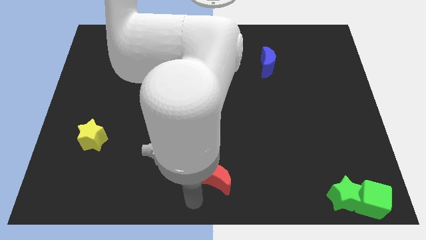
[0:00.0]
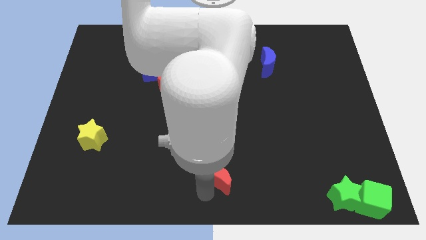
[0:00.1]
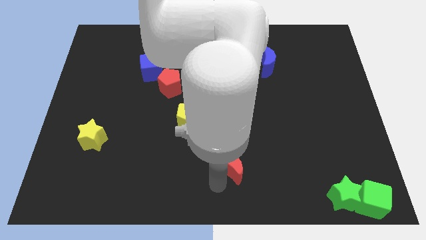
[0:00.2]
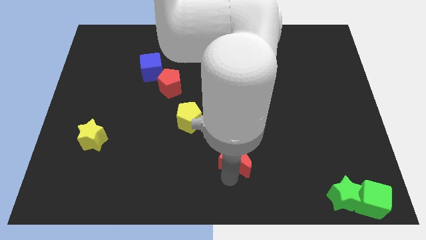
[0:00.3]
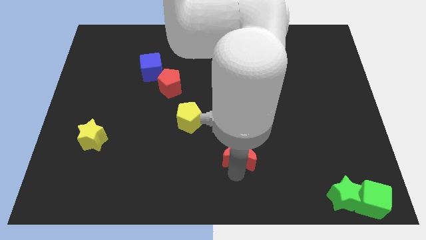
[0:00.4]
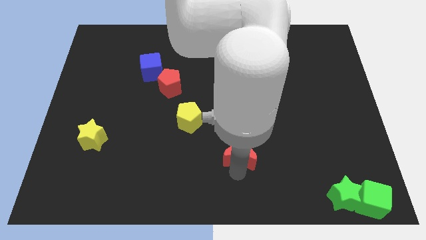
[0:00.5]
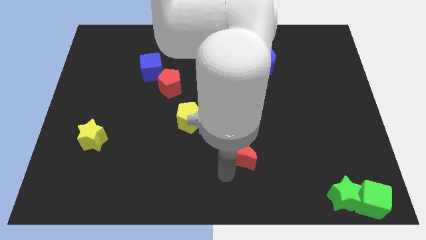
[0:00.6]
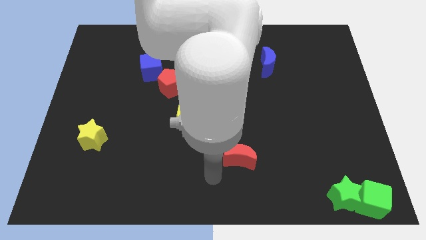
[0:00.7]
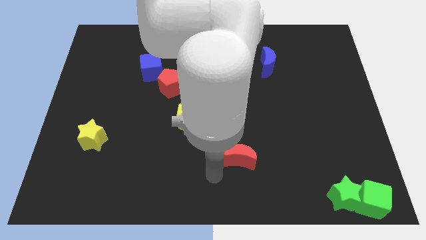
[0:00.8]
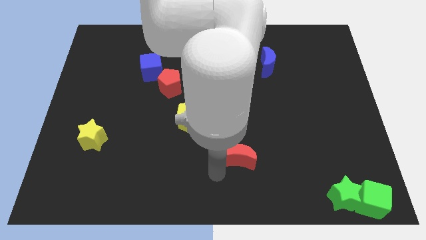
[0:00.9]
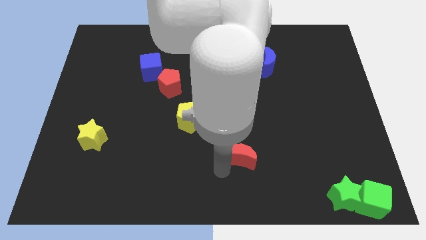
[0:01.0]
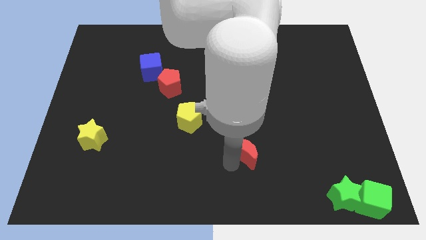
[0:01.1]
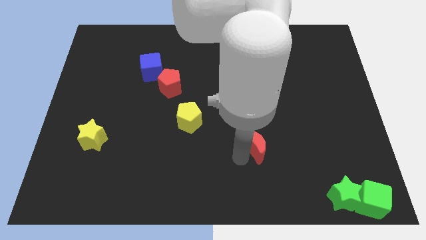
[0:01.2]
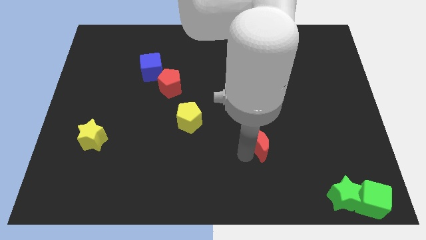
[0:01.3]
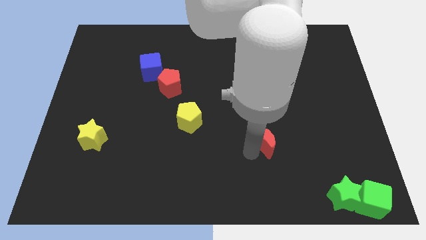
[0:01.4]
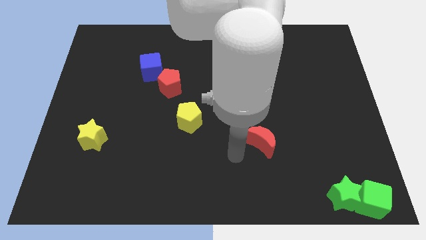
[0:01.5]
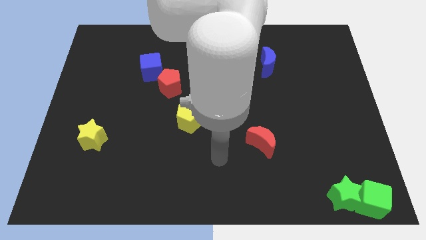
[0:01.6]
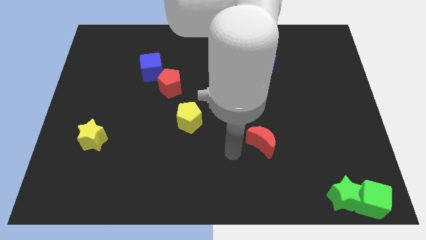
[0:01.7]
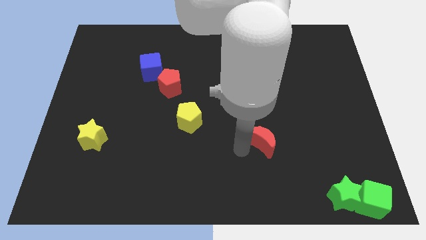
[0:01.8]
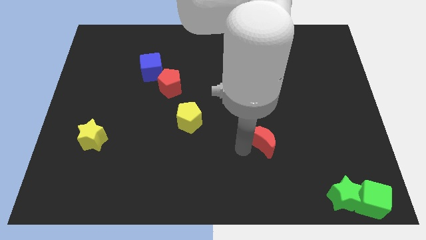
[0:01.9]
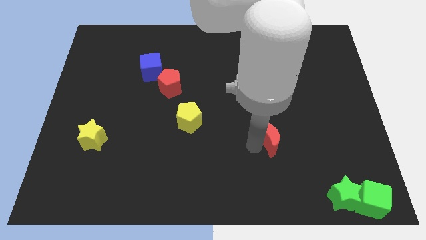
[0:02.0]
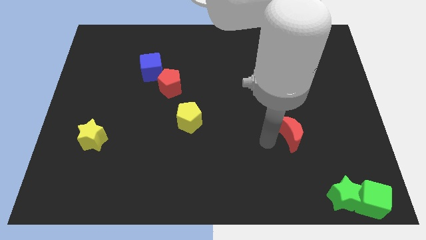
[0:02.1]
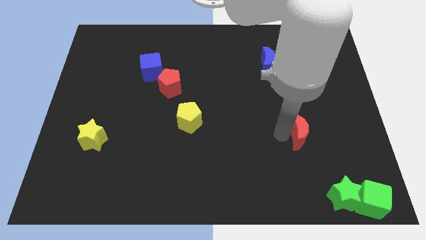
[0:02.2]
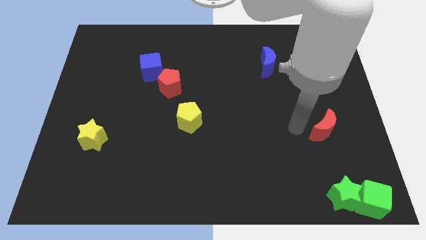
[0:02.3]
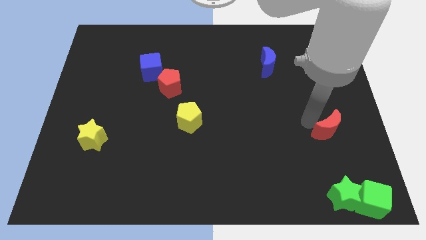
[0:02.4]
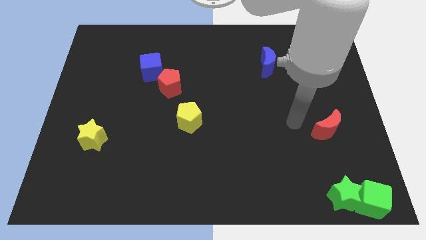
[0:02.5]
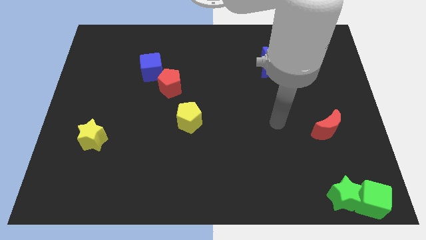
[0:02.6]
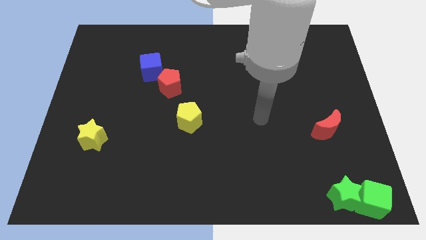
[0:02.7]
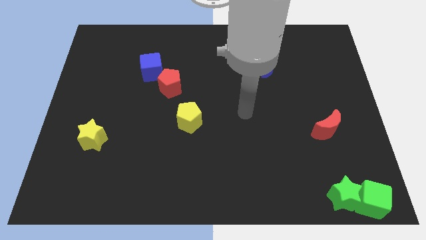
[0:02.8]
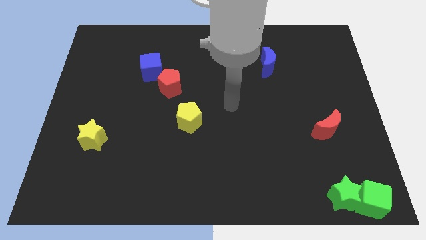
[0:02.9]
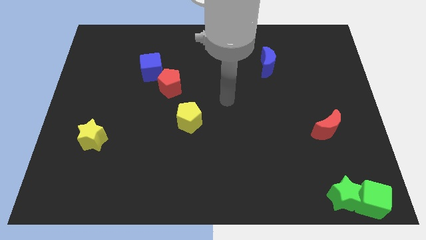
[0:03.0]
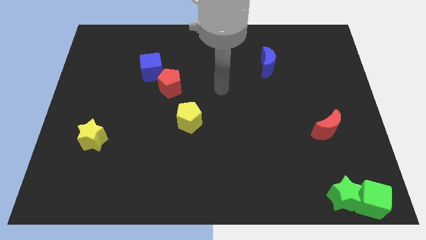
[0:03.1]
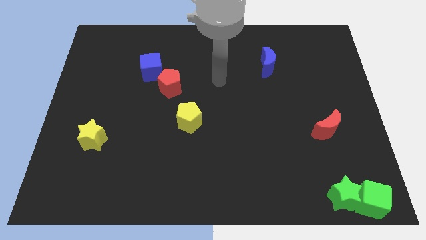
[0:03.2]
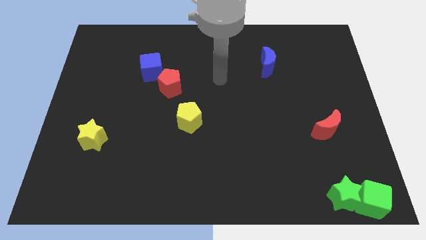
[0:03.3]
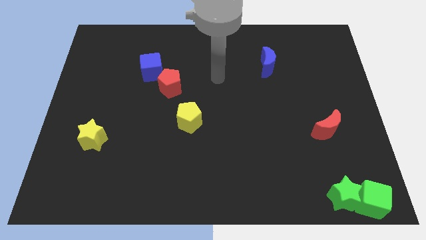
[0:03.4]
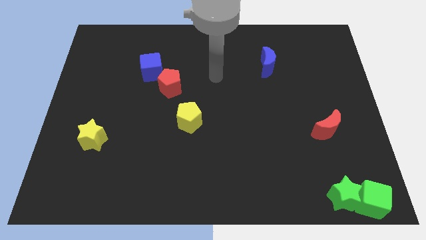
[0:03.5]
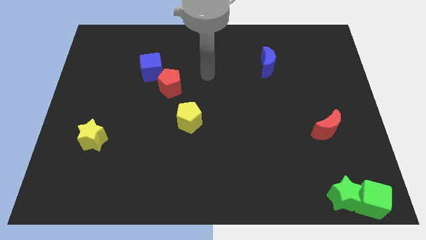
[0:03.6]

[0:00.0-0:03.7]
place the red moon above the green star

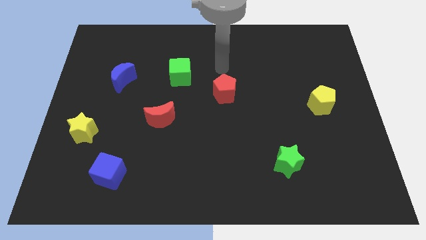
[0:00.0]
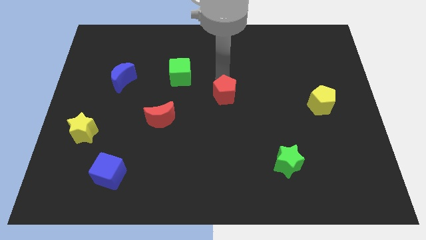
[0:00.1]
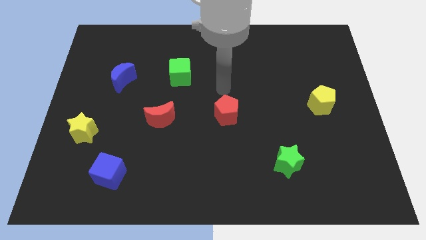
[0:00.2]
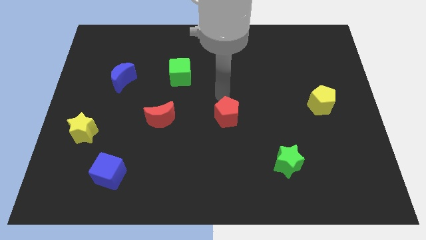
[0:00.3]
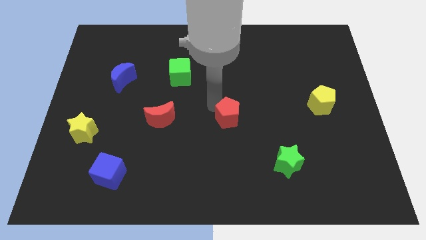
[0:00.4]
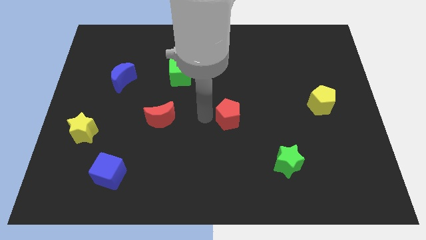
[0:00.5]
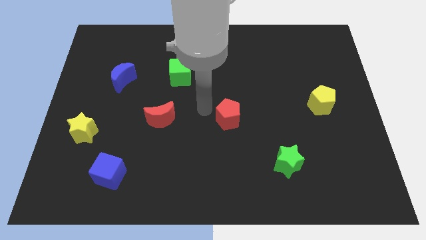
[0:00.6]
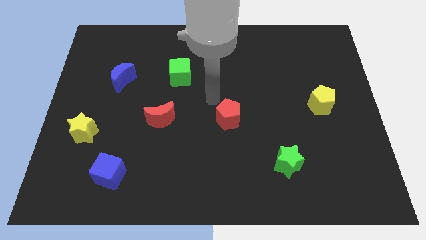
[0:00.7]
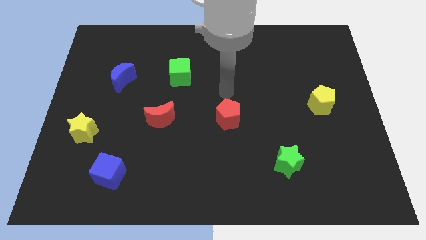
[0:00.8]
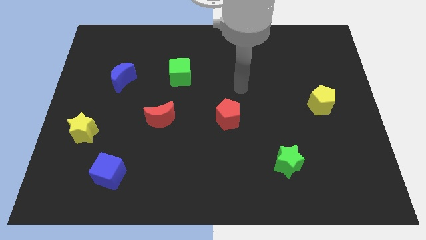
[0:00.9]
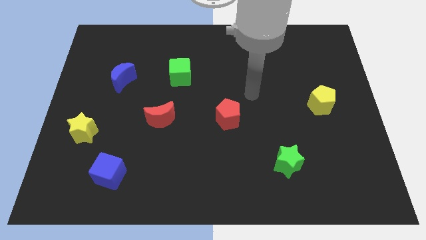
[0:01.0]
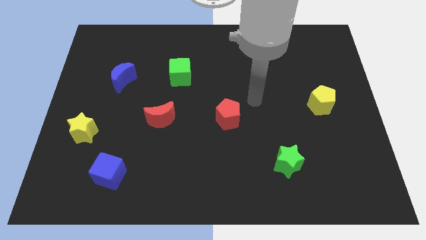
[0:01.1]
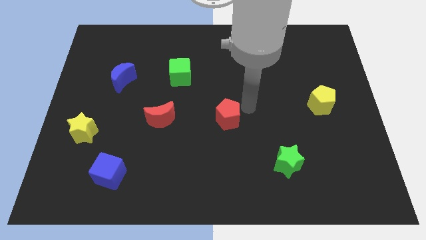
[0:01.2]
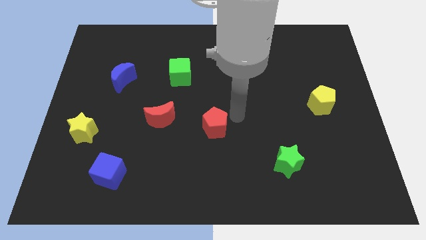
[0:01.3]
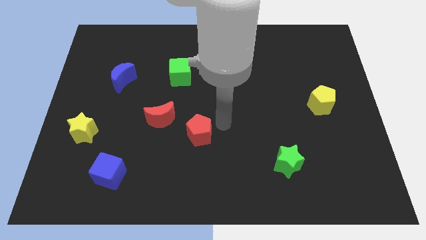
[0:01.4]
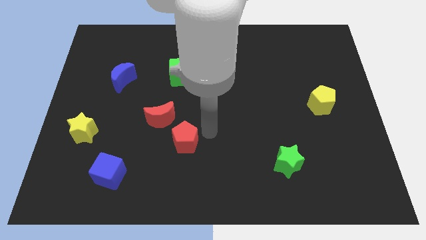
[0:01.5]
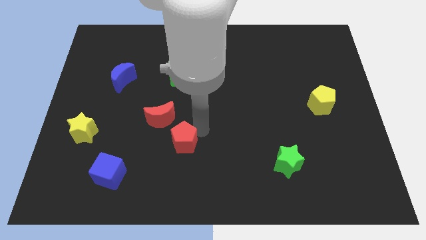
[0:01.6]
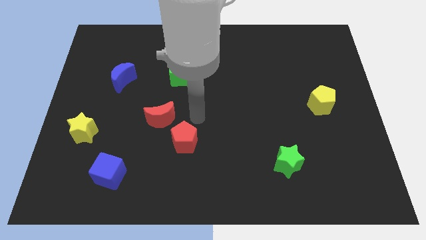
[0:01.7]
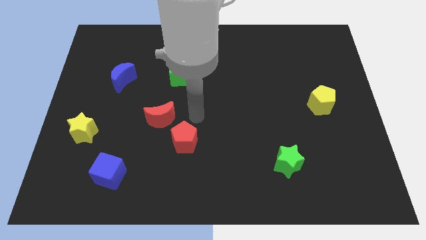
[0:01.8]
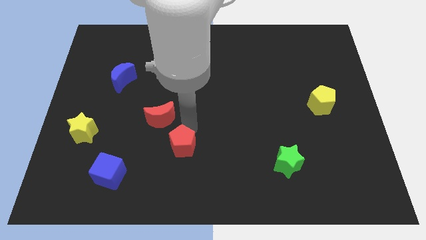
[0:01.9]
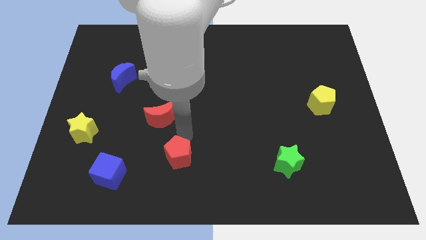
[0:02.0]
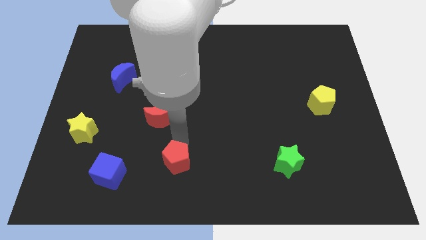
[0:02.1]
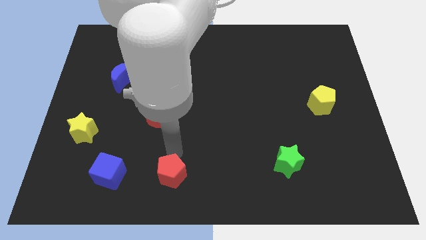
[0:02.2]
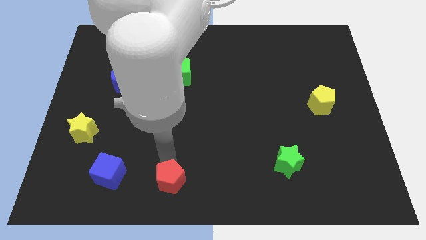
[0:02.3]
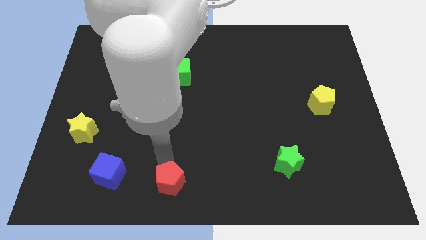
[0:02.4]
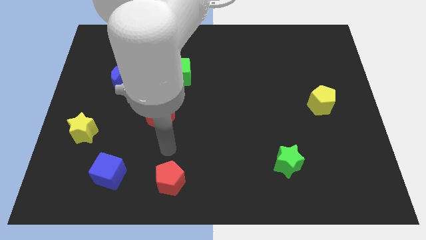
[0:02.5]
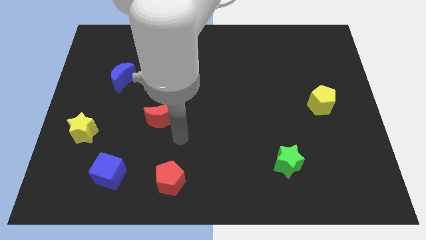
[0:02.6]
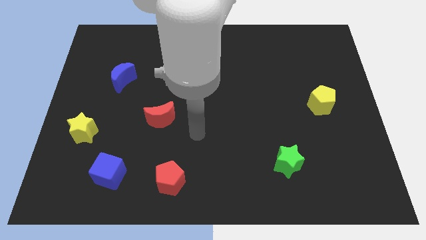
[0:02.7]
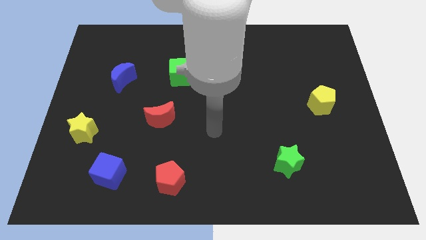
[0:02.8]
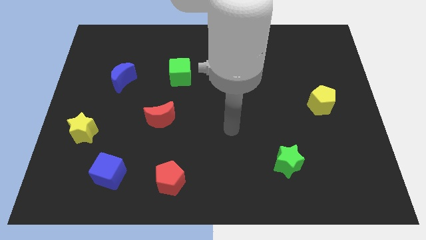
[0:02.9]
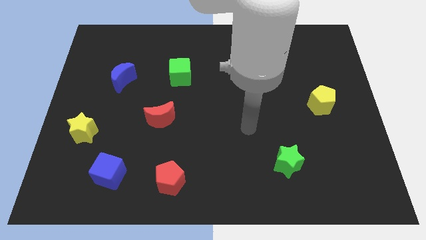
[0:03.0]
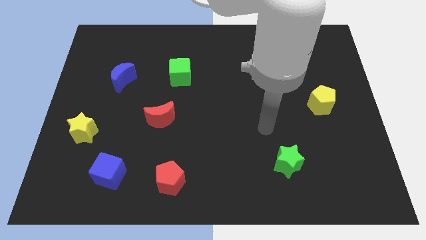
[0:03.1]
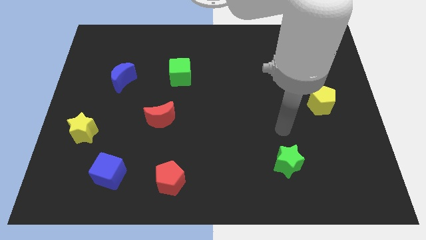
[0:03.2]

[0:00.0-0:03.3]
move the red pentagon to the bottom right side of the red moon

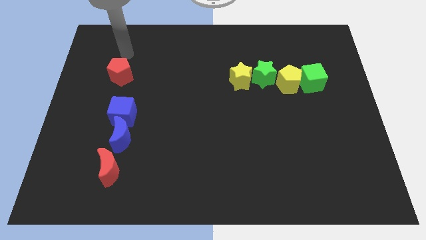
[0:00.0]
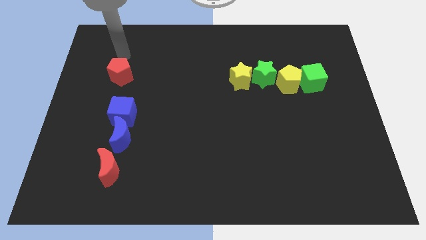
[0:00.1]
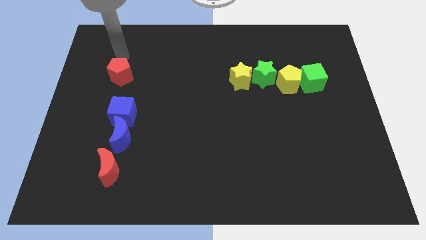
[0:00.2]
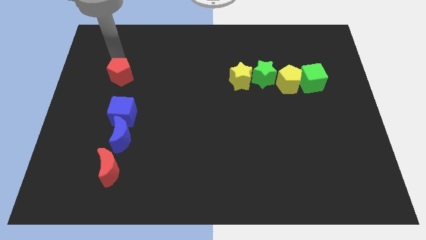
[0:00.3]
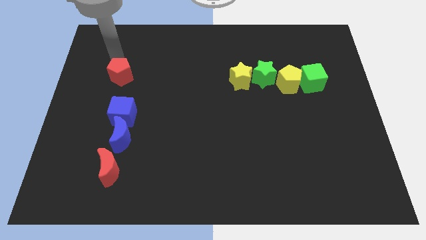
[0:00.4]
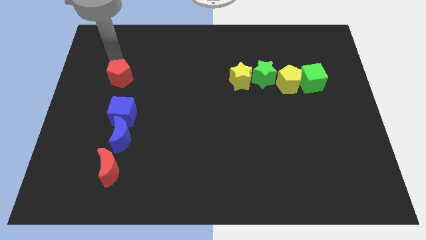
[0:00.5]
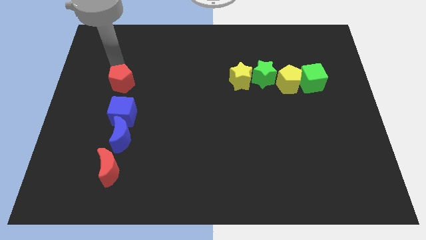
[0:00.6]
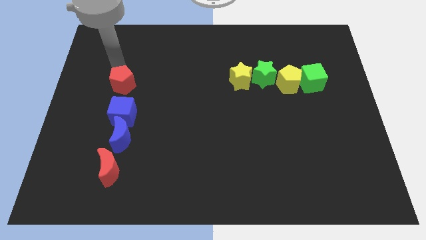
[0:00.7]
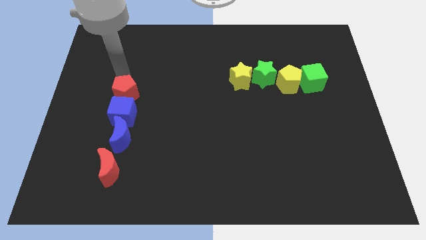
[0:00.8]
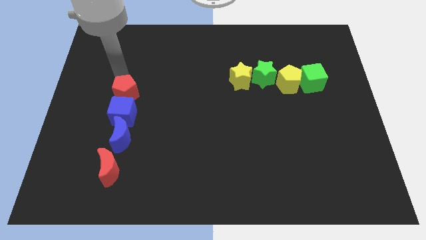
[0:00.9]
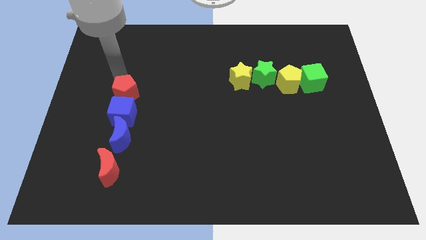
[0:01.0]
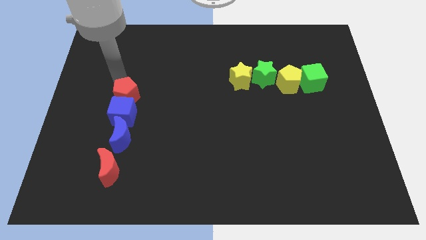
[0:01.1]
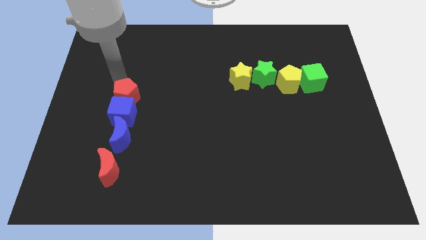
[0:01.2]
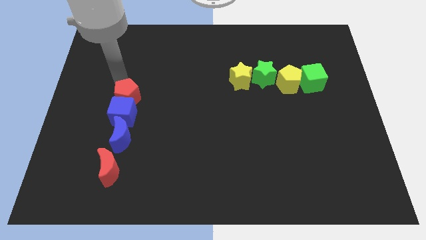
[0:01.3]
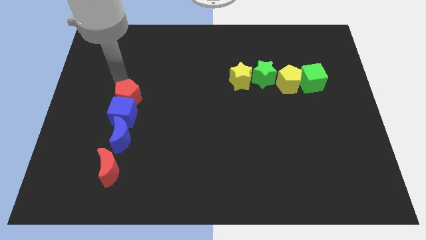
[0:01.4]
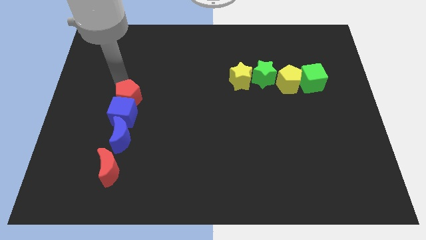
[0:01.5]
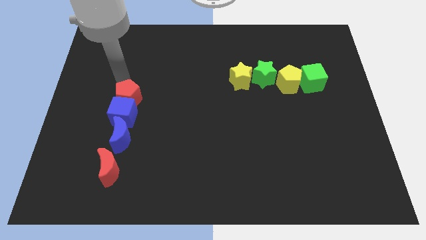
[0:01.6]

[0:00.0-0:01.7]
move the red pentagon into the blue cube

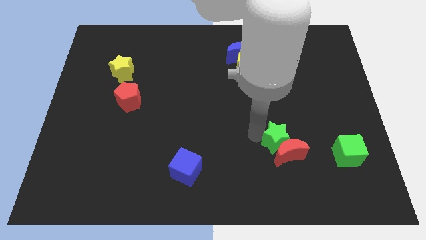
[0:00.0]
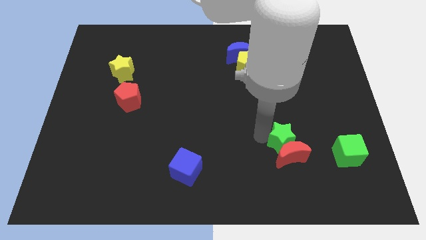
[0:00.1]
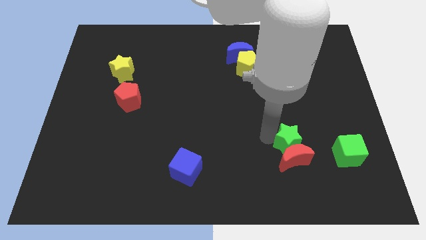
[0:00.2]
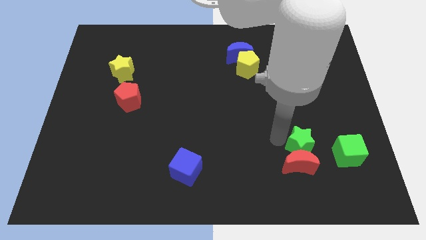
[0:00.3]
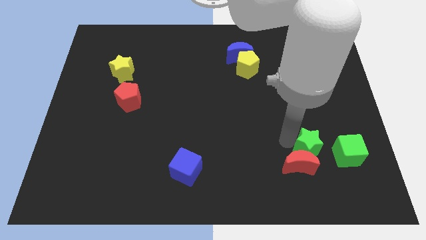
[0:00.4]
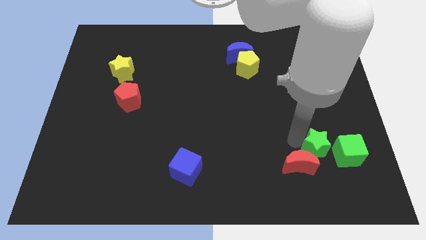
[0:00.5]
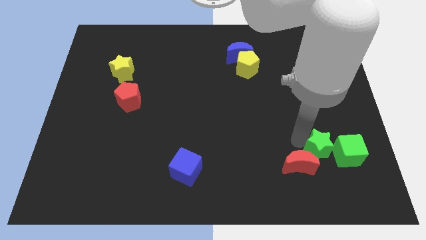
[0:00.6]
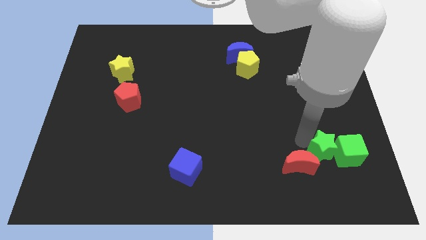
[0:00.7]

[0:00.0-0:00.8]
slightly push the green star to the left of the green cube
